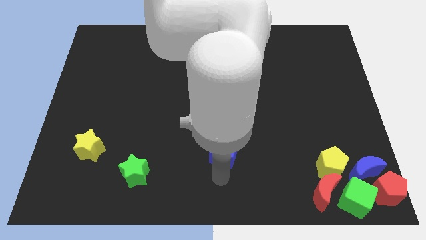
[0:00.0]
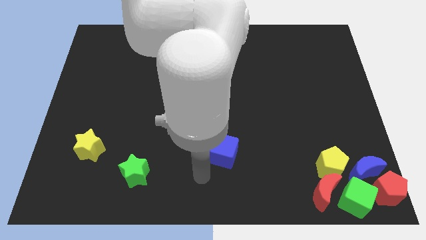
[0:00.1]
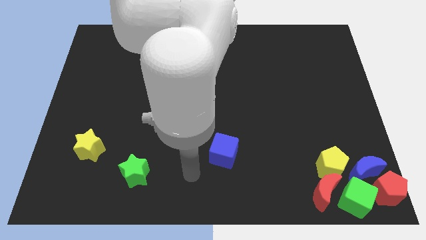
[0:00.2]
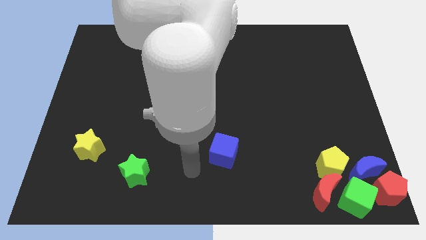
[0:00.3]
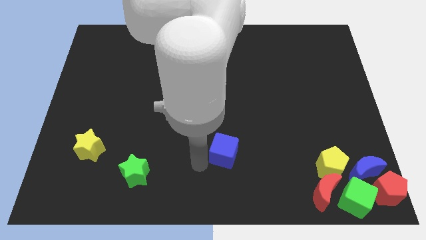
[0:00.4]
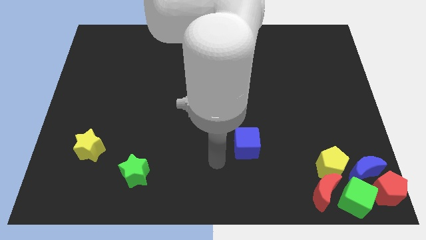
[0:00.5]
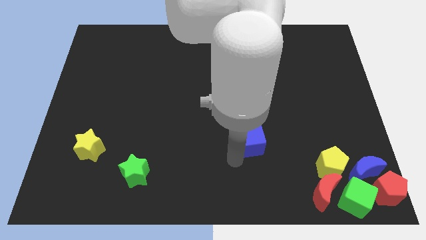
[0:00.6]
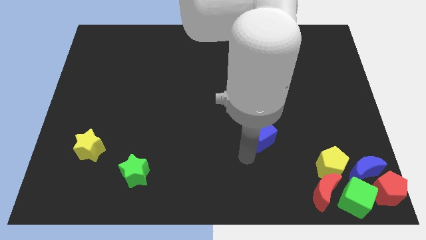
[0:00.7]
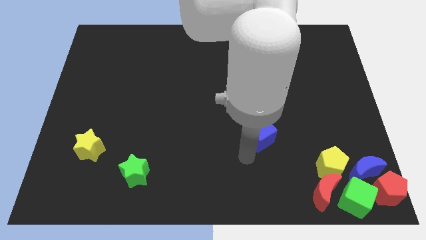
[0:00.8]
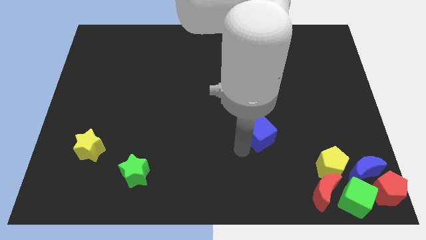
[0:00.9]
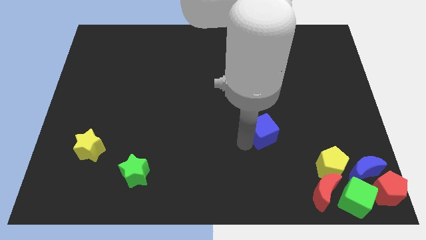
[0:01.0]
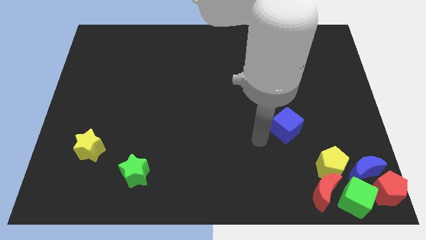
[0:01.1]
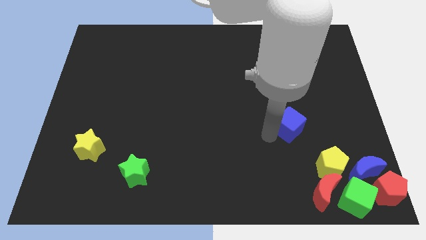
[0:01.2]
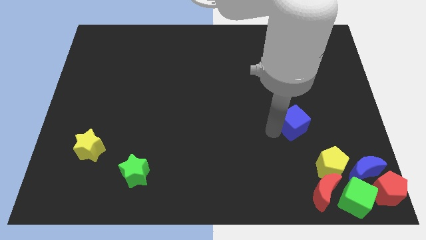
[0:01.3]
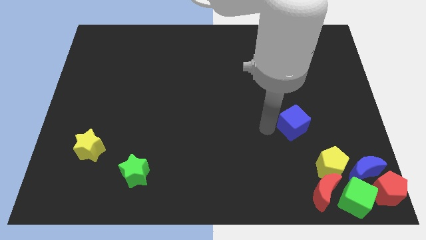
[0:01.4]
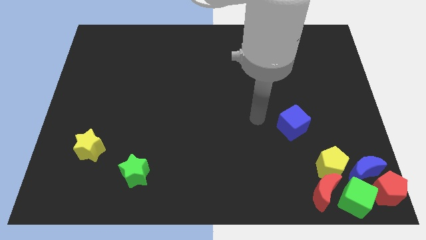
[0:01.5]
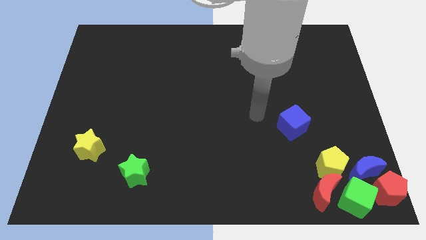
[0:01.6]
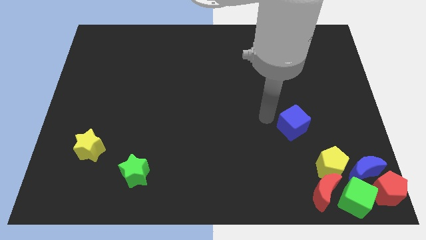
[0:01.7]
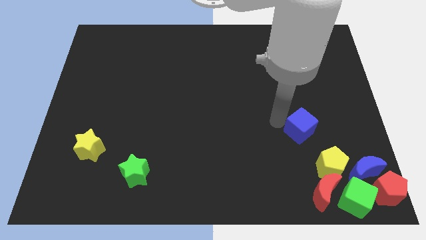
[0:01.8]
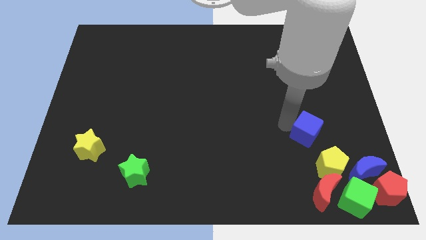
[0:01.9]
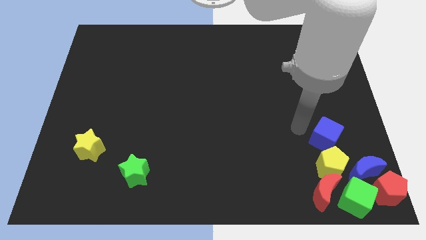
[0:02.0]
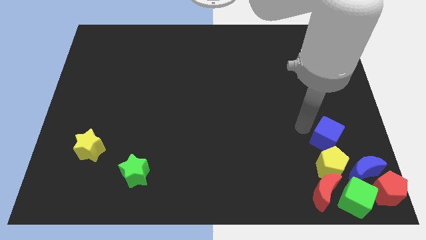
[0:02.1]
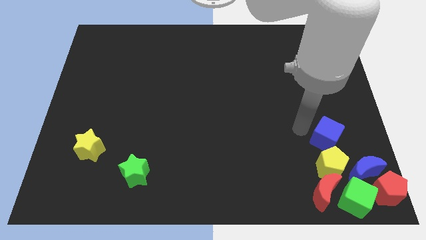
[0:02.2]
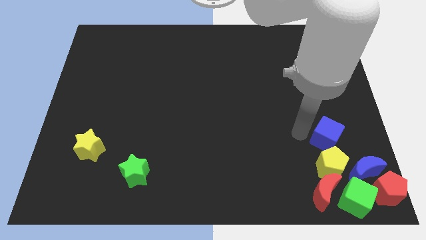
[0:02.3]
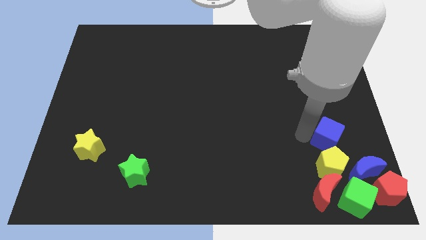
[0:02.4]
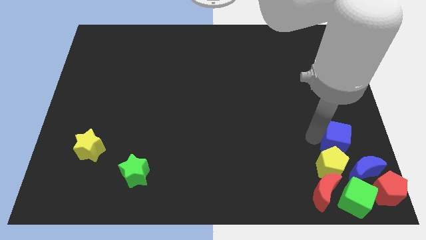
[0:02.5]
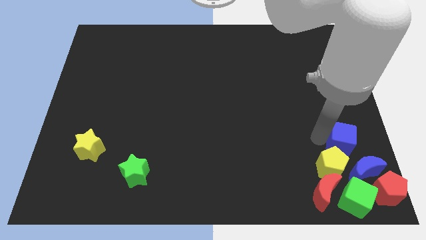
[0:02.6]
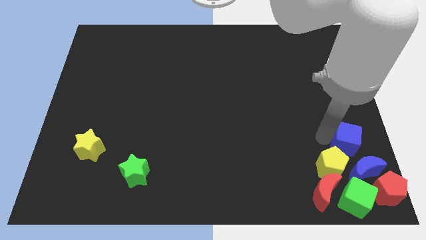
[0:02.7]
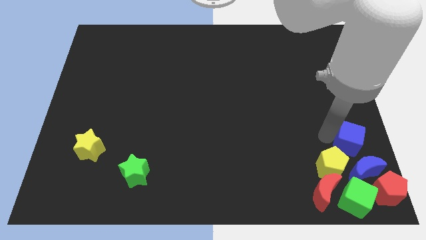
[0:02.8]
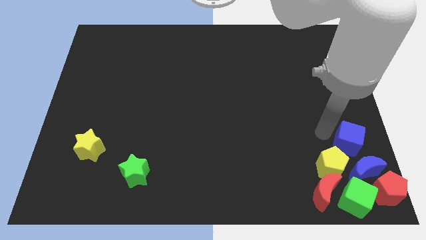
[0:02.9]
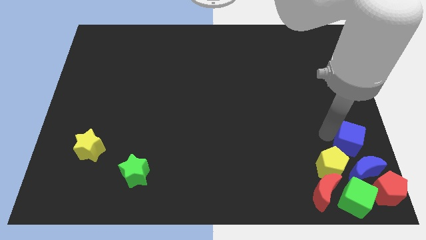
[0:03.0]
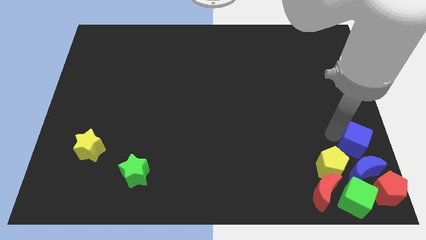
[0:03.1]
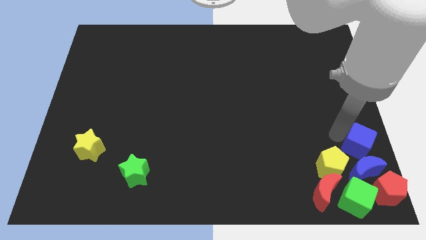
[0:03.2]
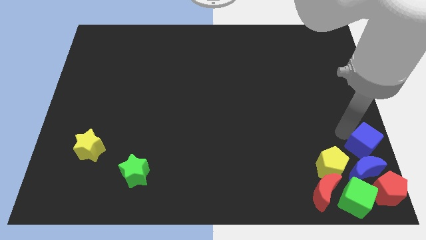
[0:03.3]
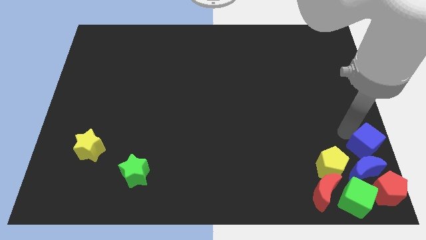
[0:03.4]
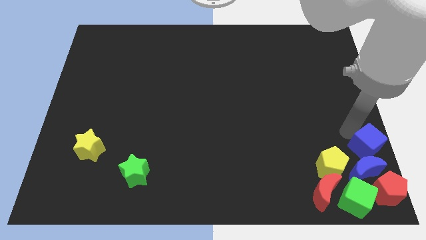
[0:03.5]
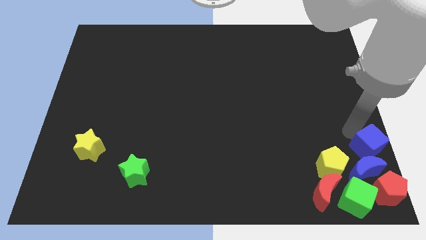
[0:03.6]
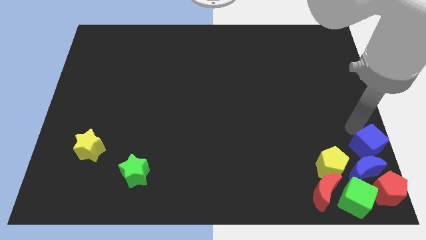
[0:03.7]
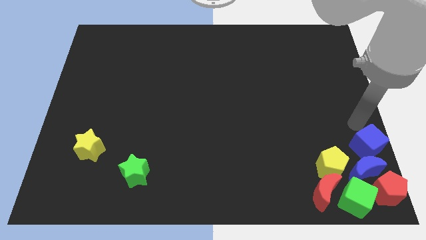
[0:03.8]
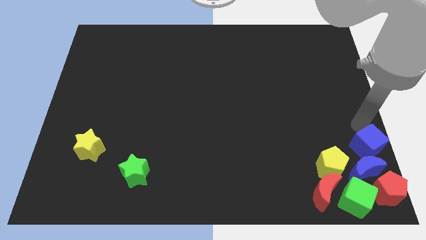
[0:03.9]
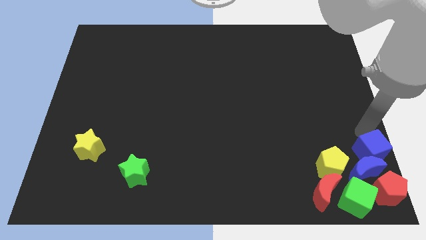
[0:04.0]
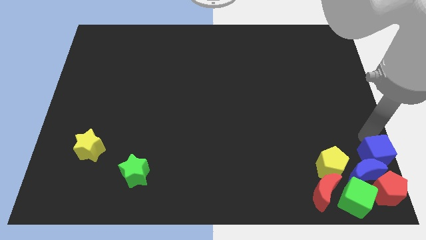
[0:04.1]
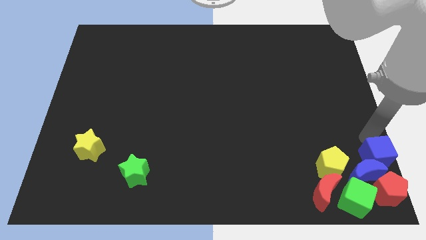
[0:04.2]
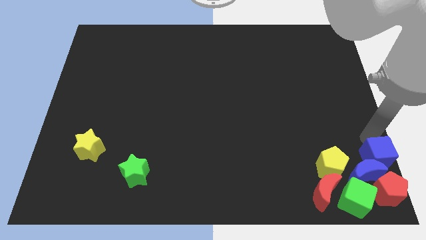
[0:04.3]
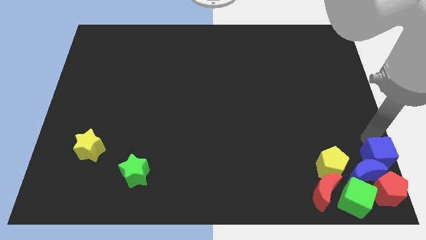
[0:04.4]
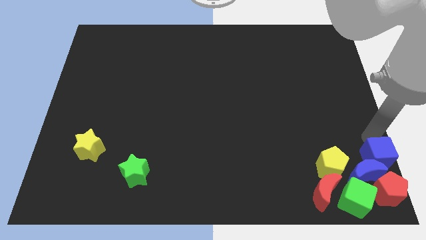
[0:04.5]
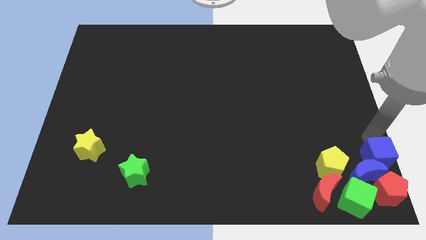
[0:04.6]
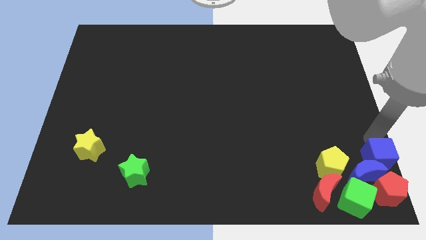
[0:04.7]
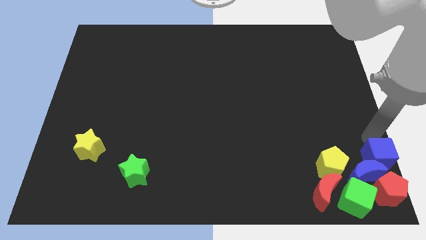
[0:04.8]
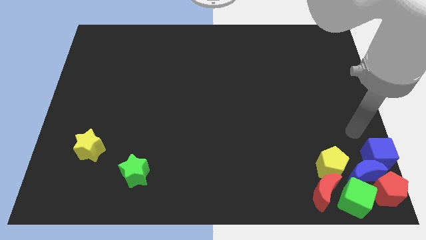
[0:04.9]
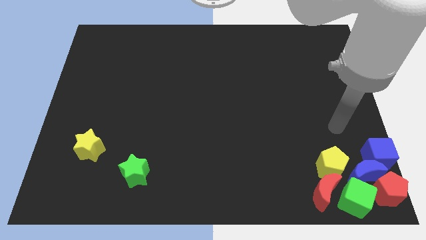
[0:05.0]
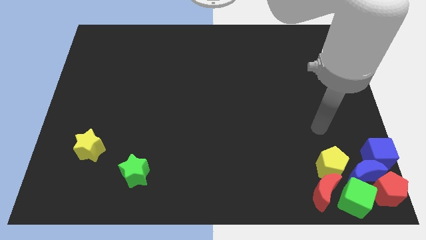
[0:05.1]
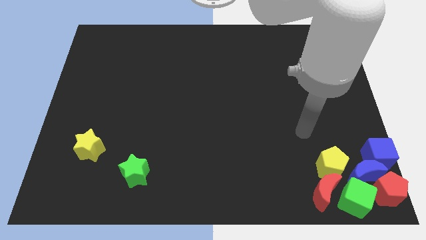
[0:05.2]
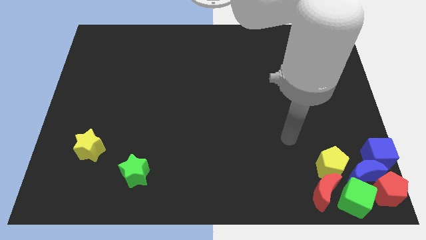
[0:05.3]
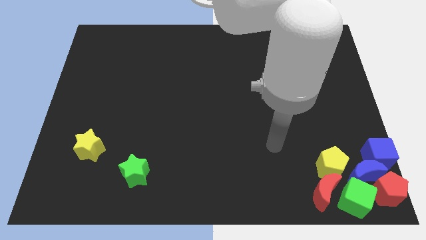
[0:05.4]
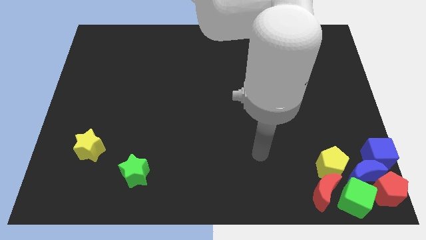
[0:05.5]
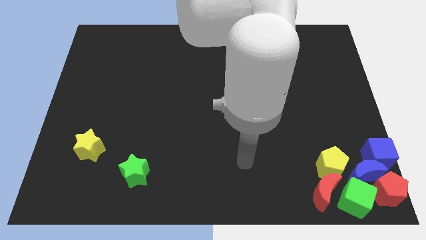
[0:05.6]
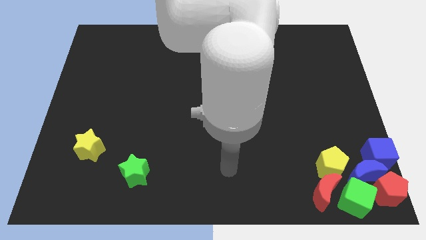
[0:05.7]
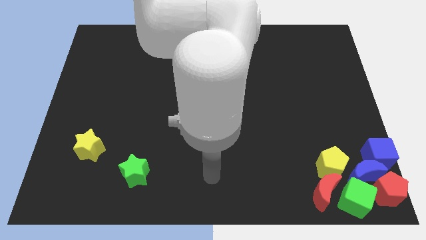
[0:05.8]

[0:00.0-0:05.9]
push blue cube into the blue moon

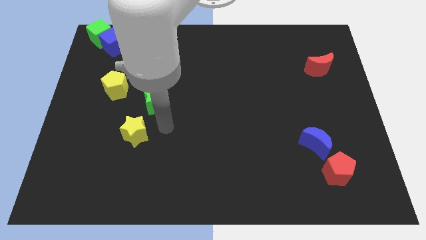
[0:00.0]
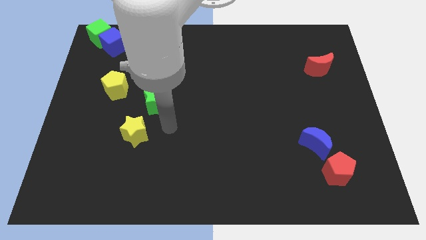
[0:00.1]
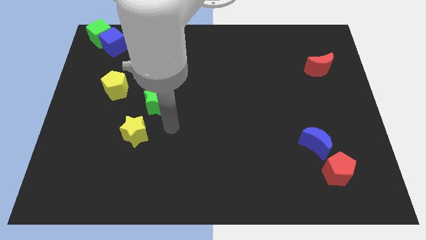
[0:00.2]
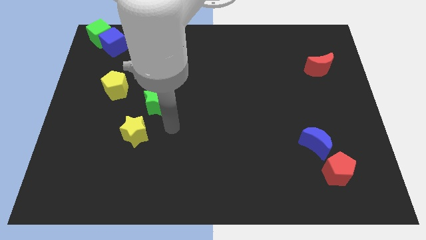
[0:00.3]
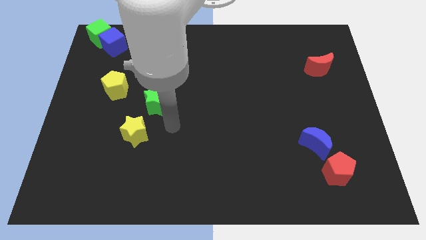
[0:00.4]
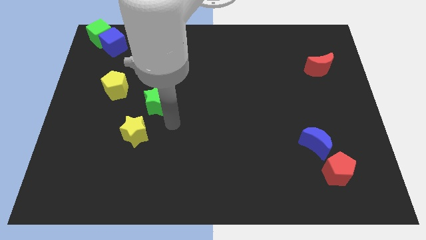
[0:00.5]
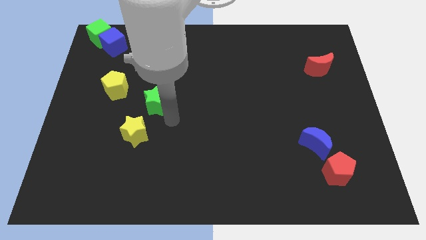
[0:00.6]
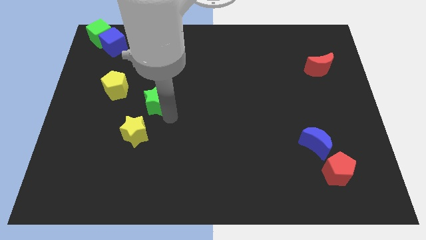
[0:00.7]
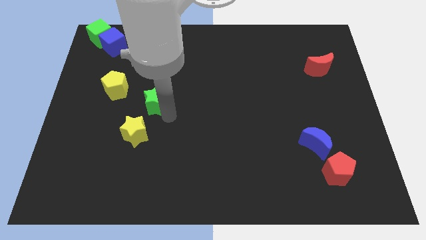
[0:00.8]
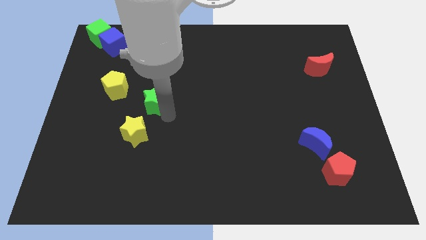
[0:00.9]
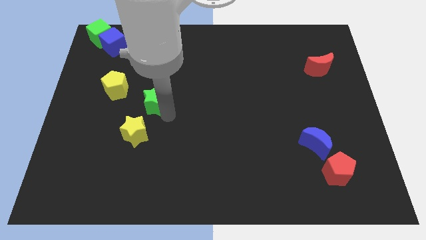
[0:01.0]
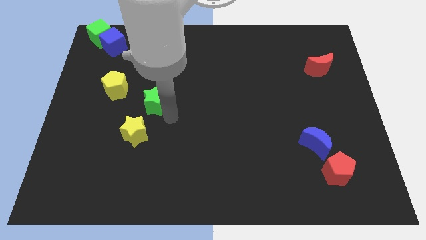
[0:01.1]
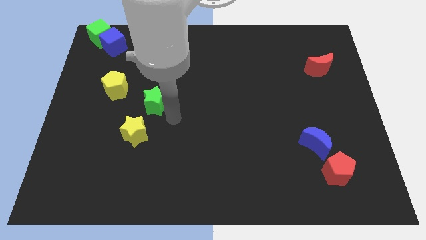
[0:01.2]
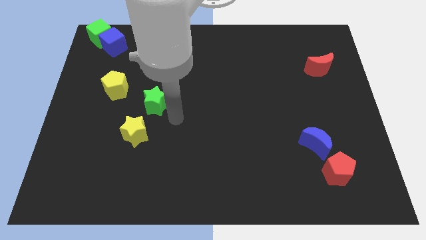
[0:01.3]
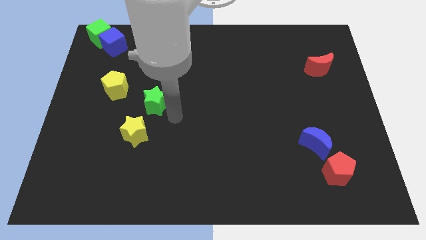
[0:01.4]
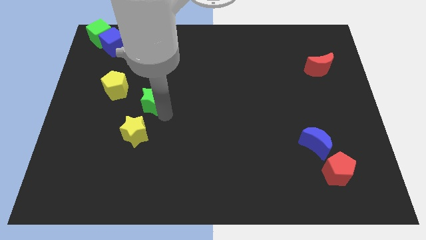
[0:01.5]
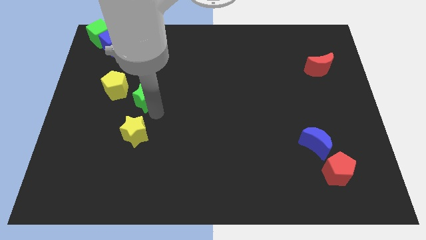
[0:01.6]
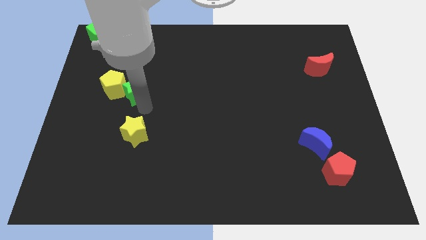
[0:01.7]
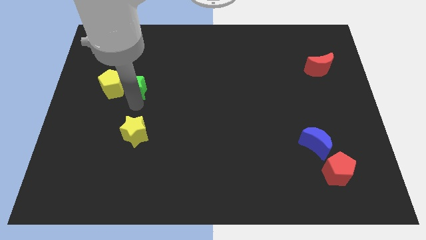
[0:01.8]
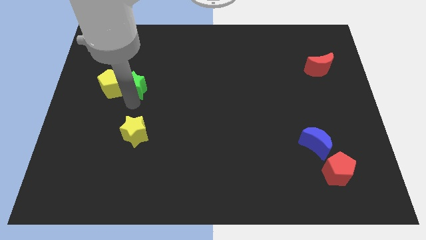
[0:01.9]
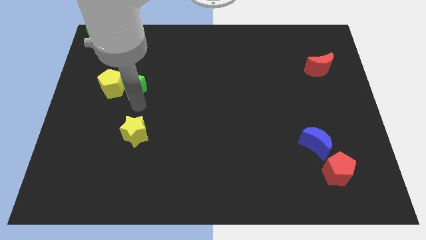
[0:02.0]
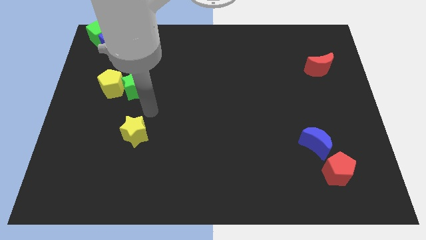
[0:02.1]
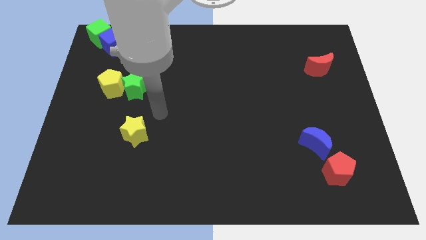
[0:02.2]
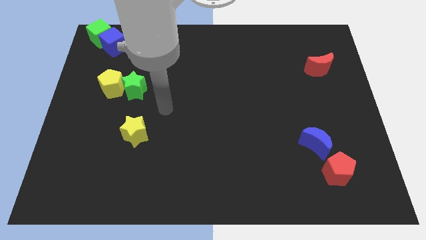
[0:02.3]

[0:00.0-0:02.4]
push the green star to the right side of the yellow pentagon

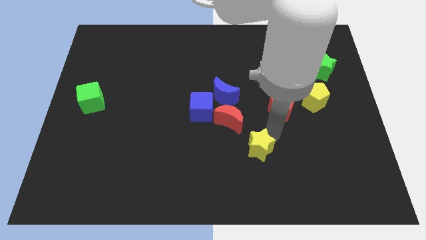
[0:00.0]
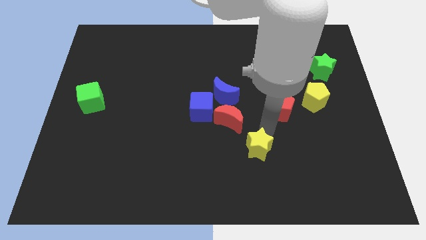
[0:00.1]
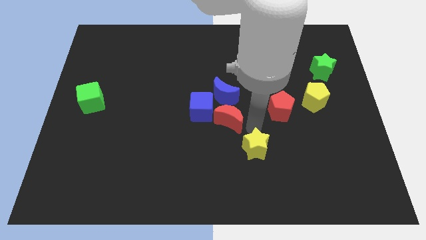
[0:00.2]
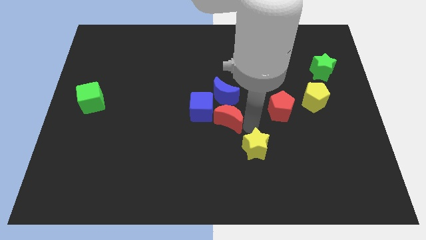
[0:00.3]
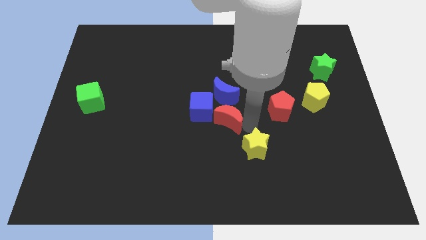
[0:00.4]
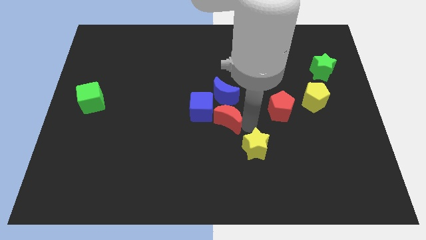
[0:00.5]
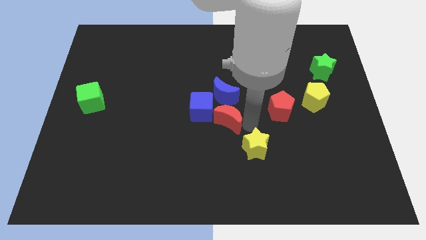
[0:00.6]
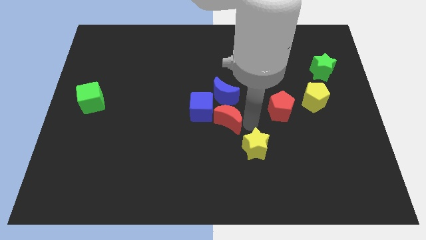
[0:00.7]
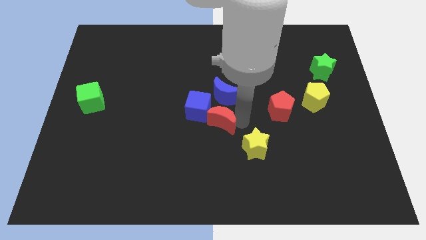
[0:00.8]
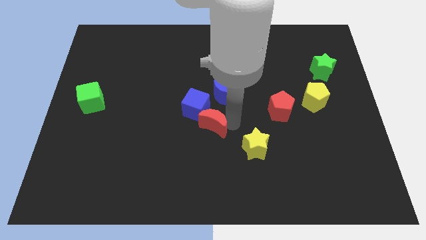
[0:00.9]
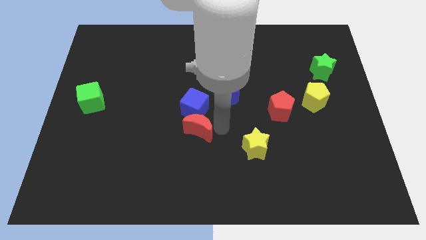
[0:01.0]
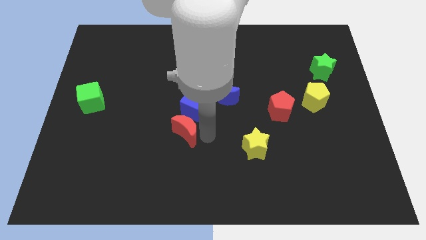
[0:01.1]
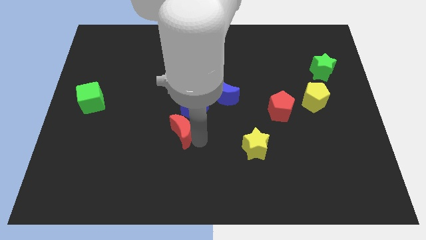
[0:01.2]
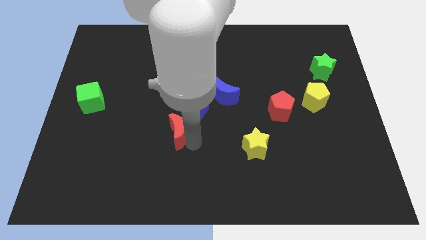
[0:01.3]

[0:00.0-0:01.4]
move the red moon to left bottom of the blue cube
